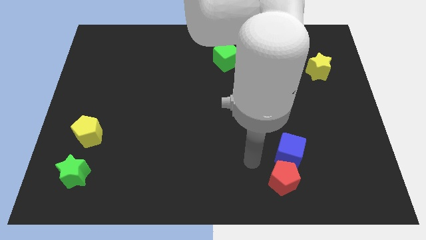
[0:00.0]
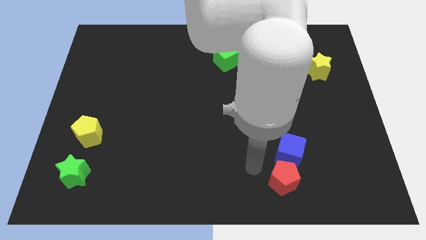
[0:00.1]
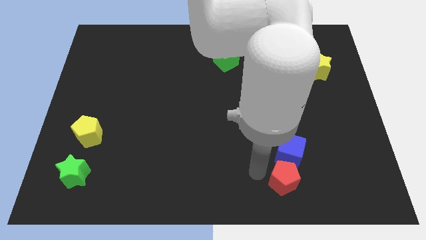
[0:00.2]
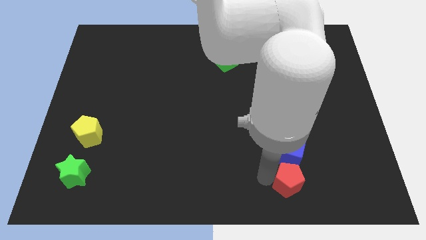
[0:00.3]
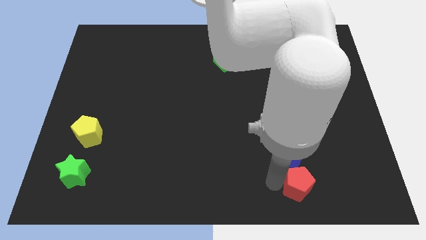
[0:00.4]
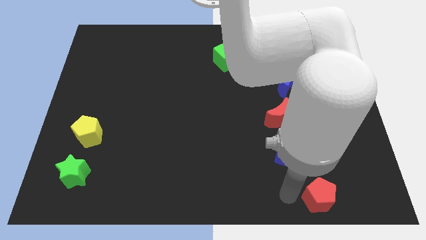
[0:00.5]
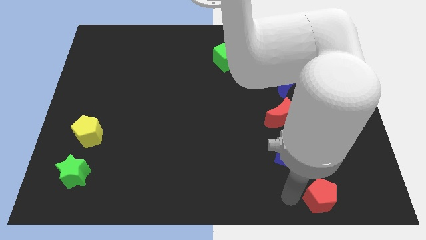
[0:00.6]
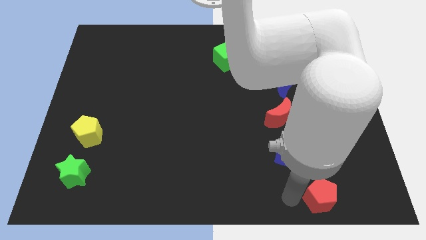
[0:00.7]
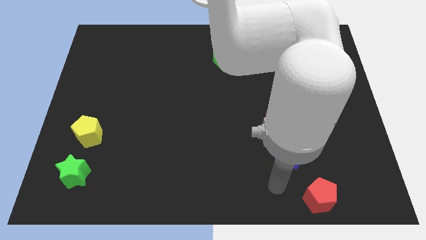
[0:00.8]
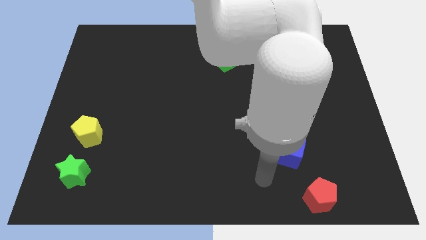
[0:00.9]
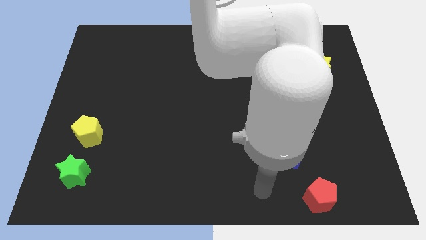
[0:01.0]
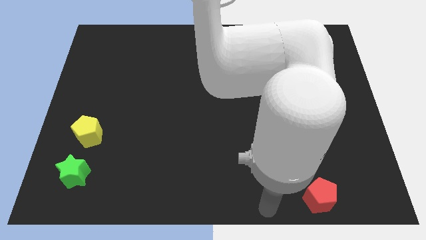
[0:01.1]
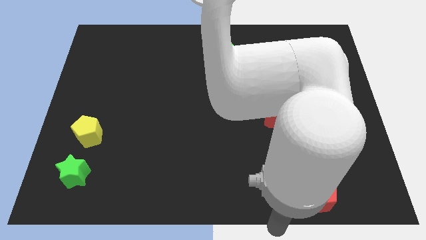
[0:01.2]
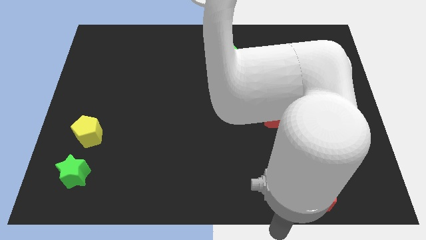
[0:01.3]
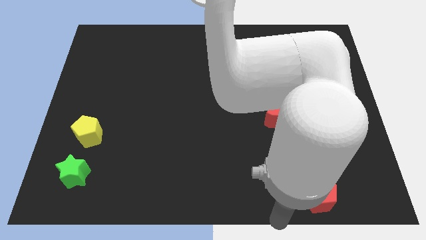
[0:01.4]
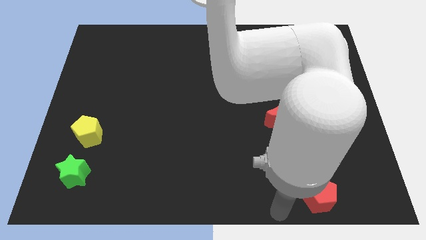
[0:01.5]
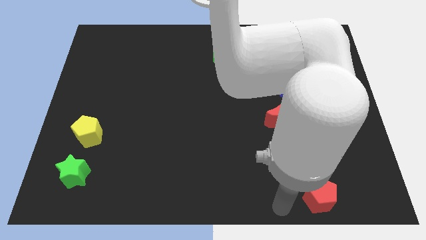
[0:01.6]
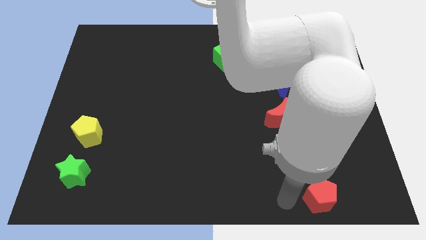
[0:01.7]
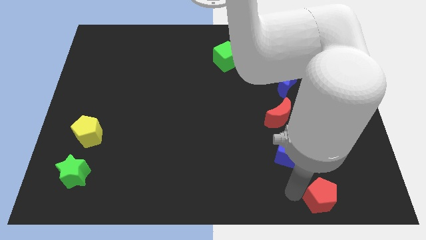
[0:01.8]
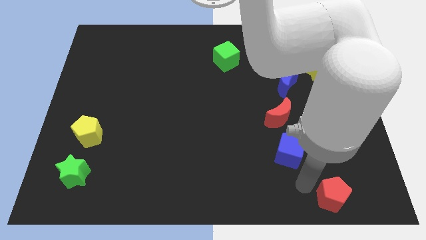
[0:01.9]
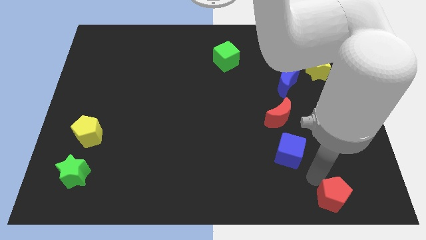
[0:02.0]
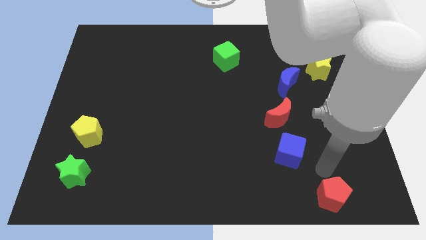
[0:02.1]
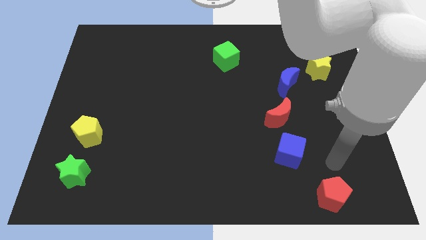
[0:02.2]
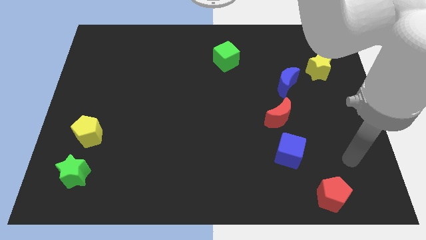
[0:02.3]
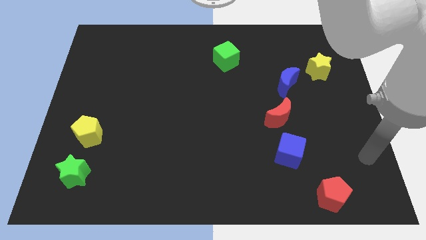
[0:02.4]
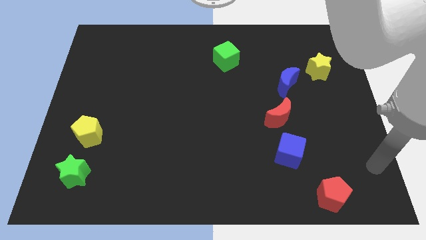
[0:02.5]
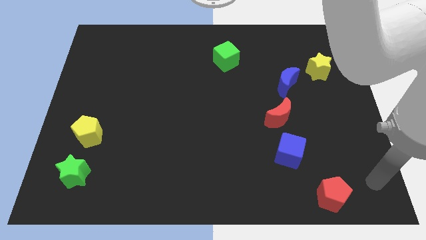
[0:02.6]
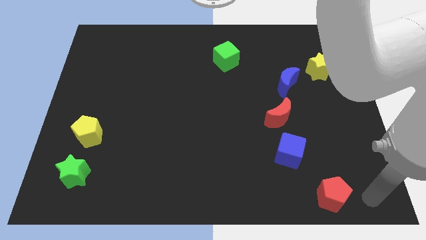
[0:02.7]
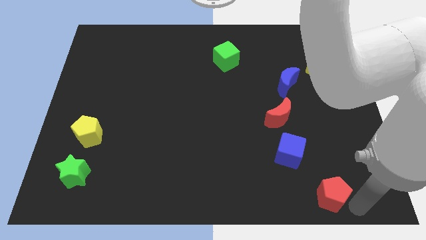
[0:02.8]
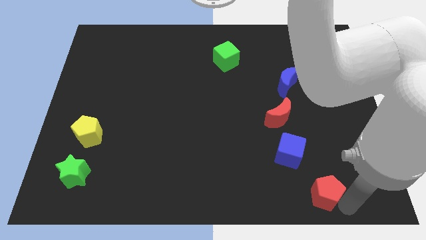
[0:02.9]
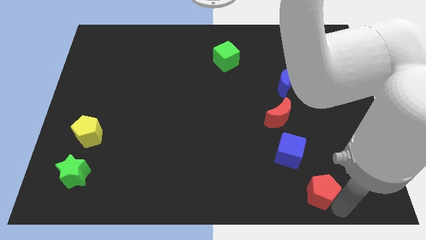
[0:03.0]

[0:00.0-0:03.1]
push the red pentagon to the bottom right of the blue cube

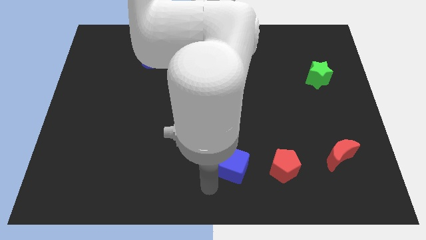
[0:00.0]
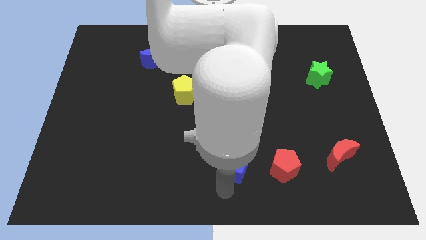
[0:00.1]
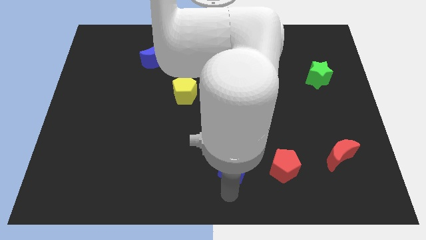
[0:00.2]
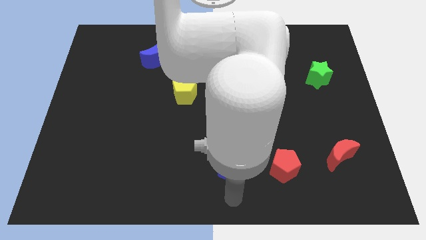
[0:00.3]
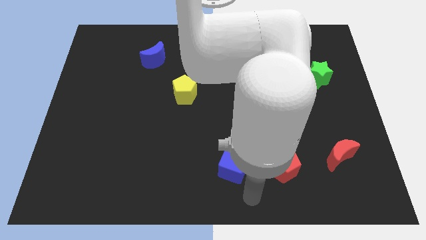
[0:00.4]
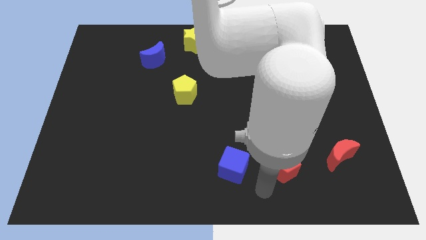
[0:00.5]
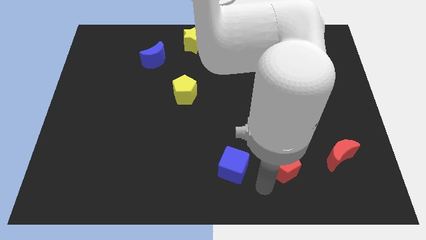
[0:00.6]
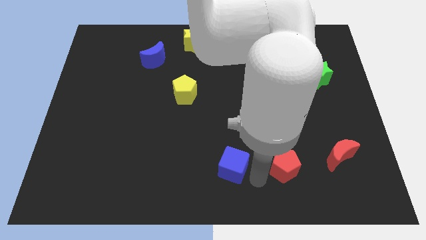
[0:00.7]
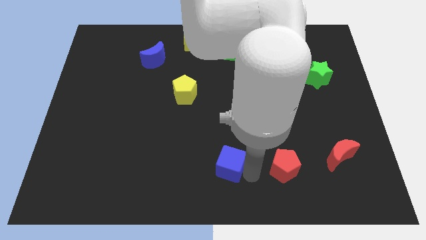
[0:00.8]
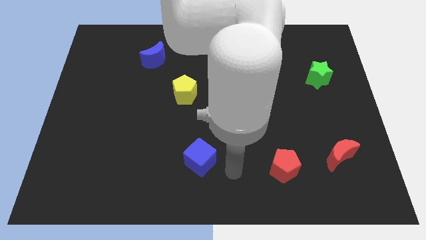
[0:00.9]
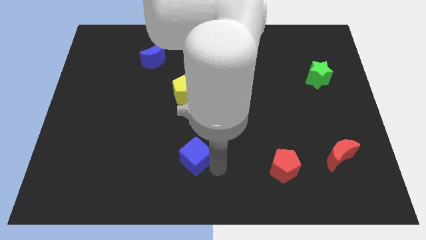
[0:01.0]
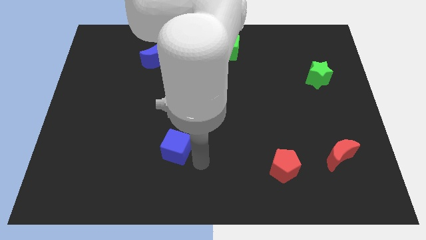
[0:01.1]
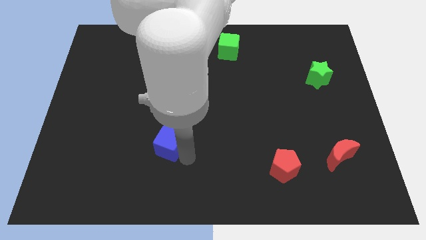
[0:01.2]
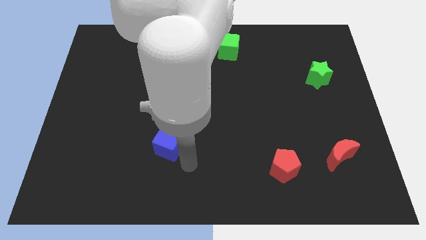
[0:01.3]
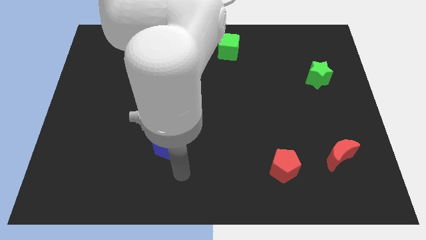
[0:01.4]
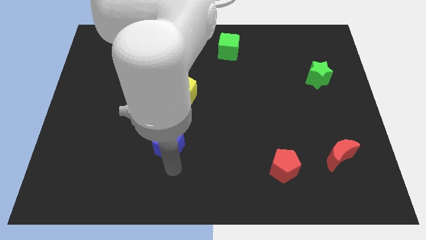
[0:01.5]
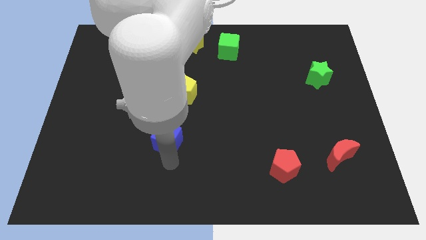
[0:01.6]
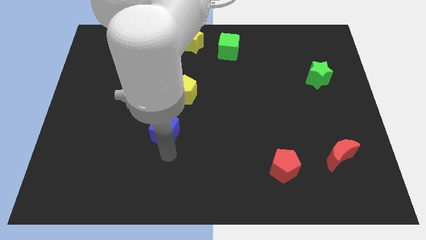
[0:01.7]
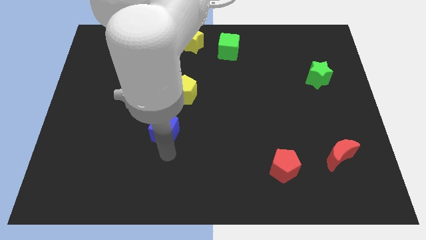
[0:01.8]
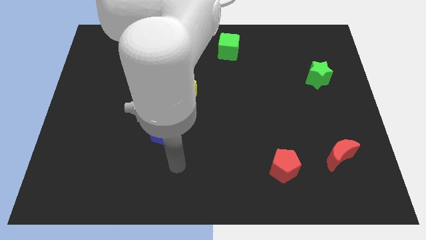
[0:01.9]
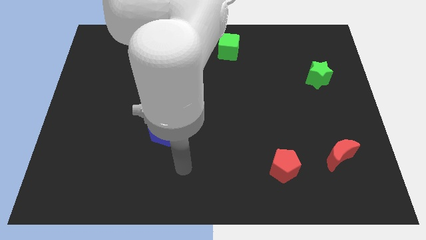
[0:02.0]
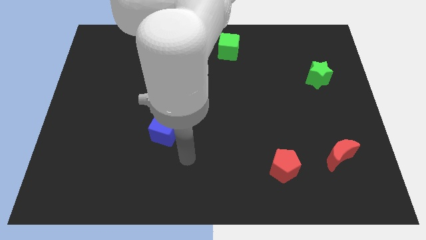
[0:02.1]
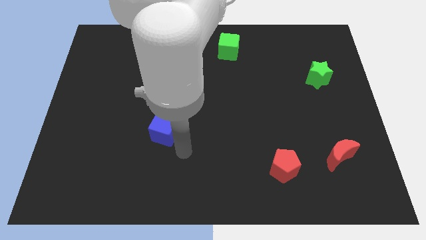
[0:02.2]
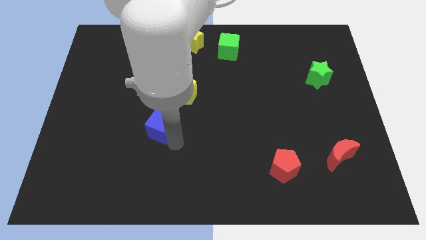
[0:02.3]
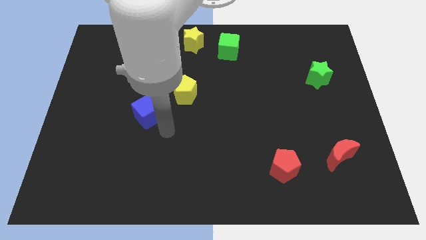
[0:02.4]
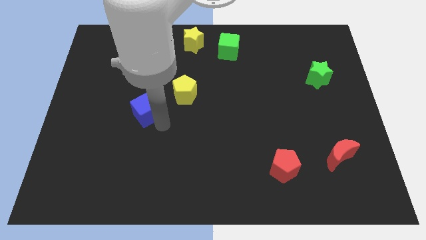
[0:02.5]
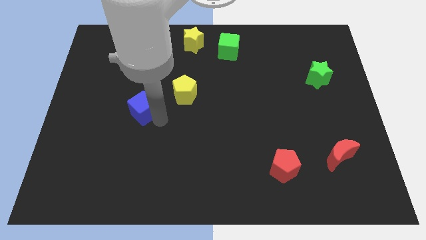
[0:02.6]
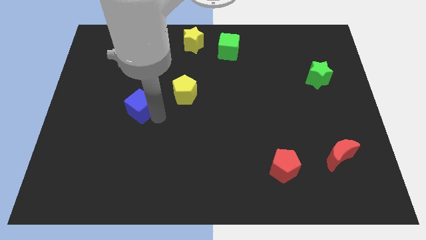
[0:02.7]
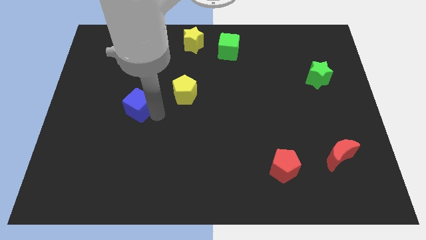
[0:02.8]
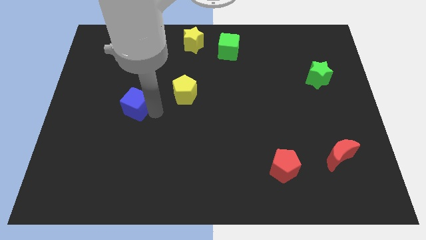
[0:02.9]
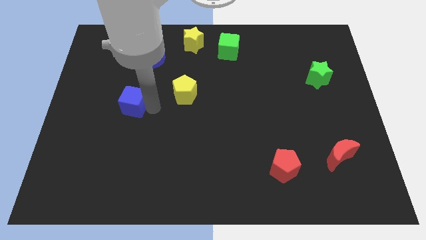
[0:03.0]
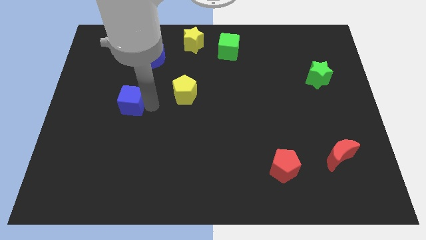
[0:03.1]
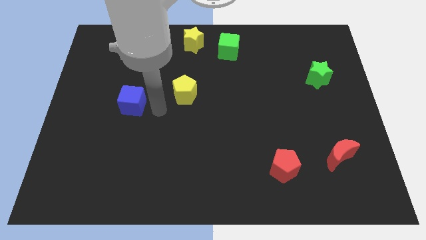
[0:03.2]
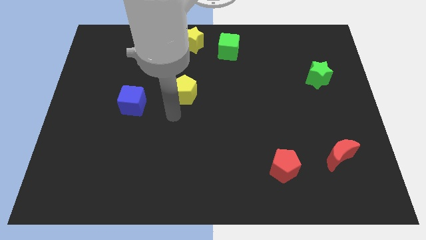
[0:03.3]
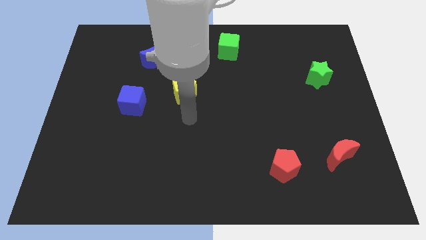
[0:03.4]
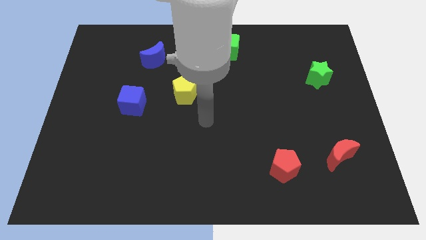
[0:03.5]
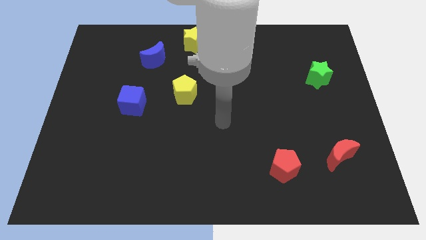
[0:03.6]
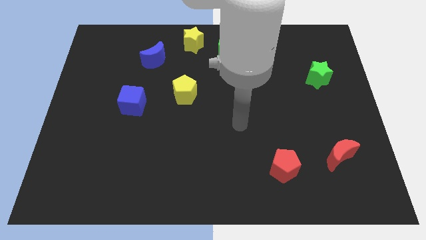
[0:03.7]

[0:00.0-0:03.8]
move the blue cube to the left of the yellow pentagon

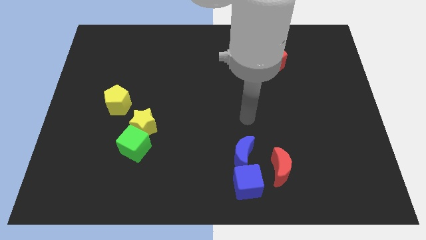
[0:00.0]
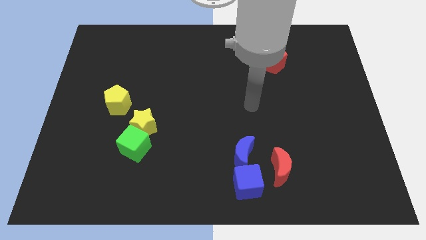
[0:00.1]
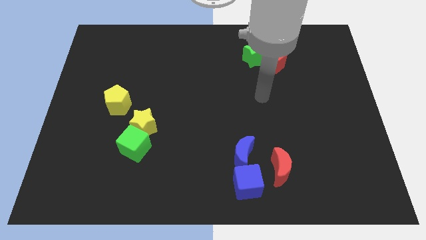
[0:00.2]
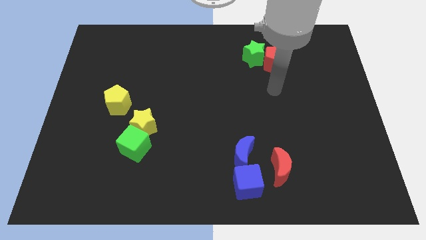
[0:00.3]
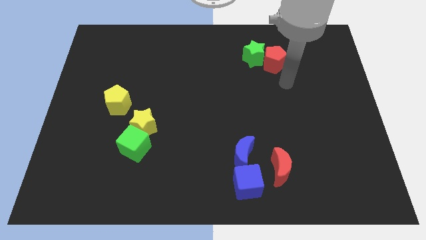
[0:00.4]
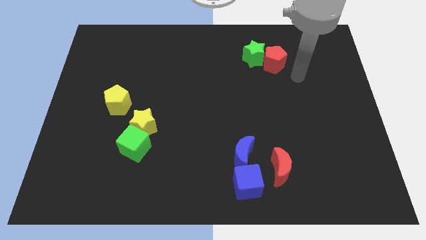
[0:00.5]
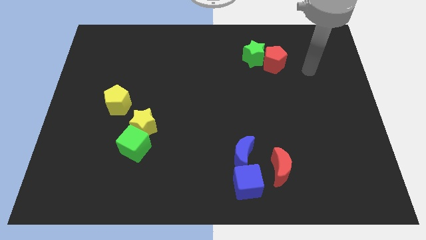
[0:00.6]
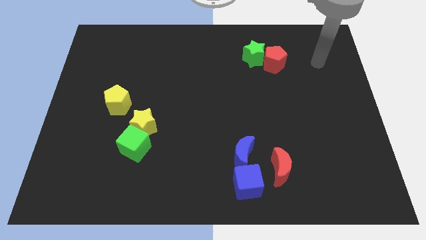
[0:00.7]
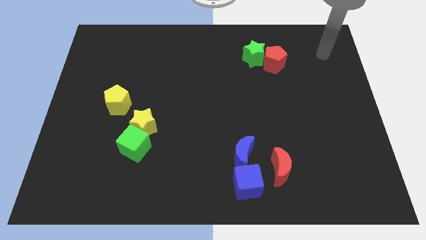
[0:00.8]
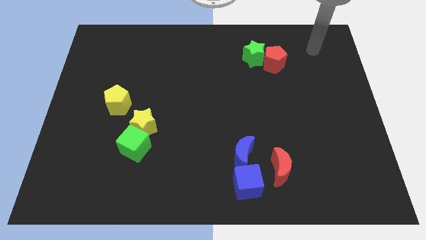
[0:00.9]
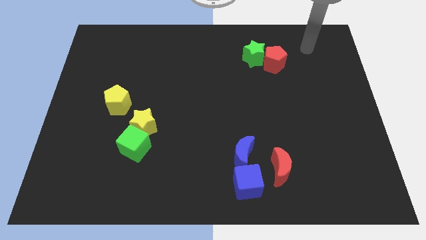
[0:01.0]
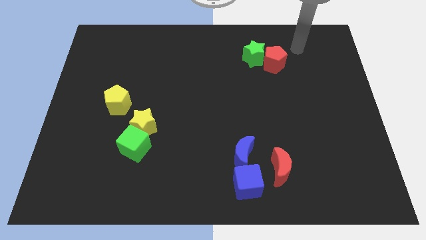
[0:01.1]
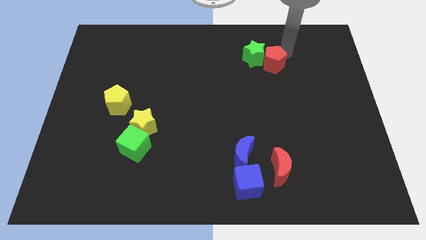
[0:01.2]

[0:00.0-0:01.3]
point your arm at the top right side of the red pentagon

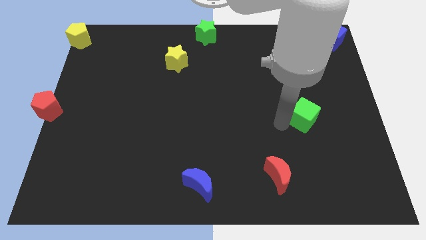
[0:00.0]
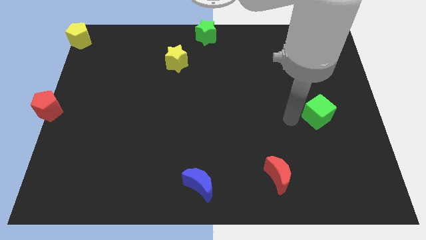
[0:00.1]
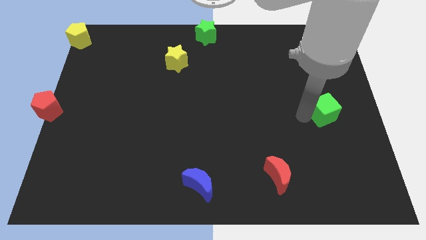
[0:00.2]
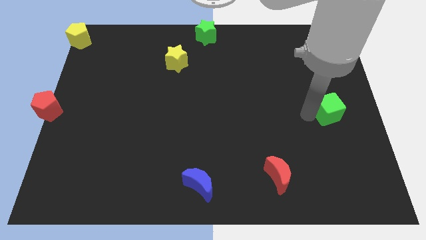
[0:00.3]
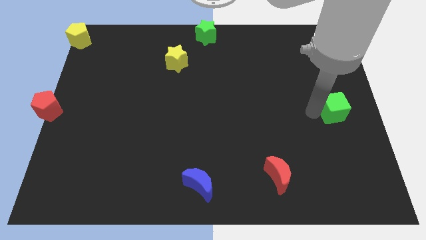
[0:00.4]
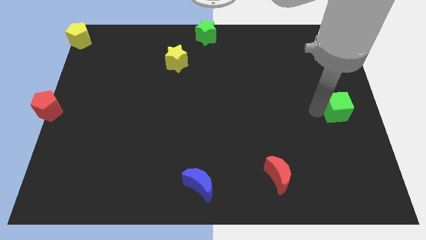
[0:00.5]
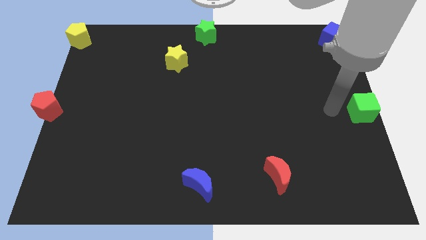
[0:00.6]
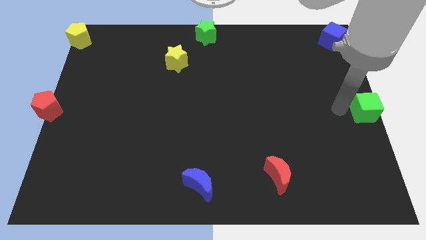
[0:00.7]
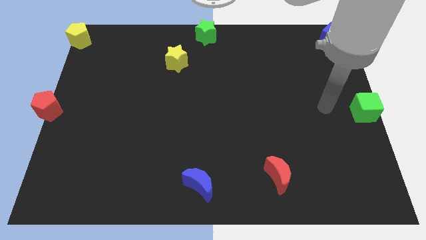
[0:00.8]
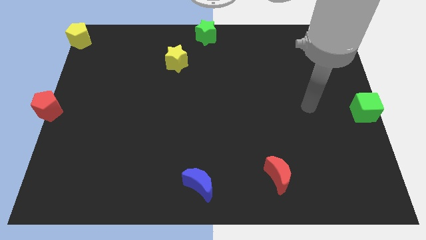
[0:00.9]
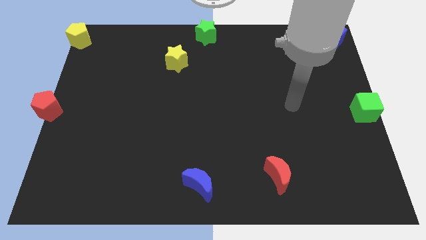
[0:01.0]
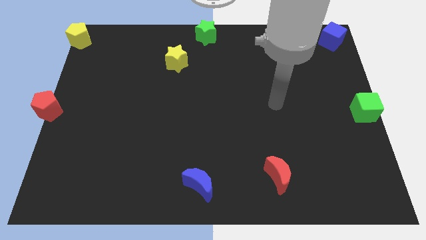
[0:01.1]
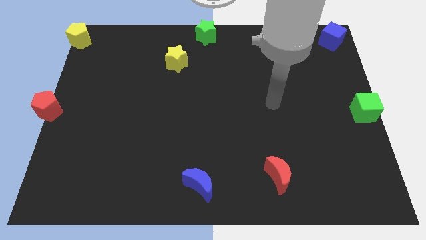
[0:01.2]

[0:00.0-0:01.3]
push the green cube to the center right side
